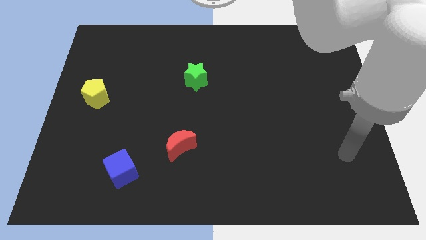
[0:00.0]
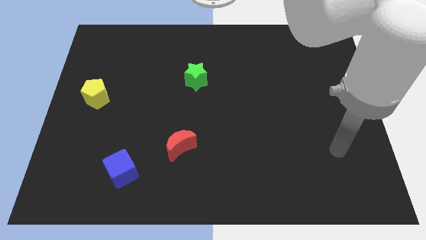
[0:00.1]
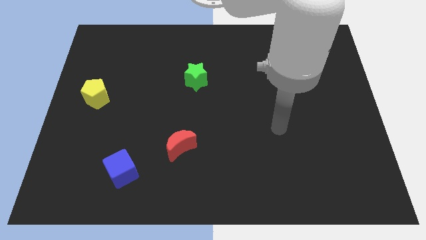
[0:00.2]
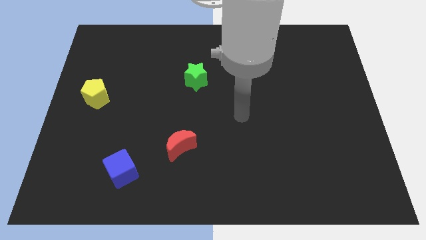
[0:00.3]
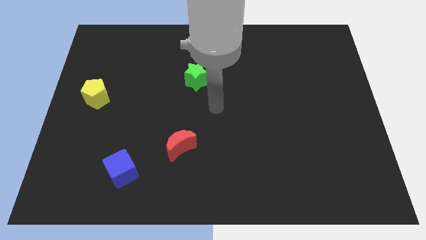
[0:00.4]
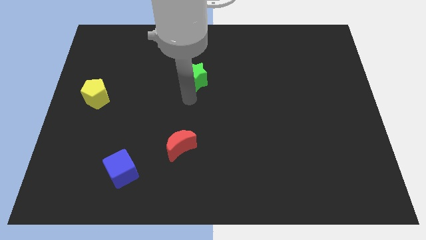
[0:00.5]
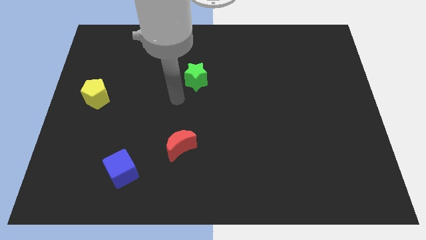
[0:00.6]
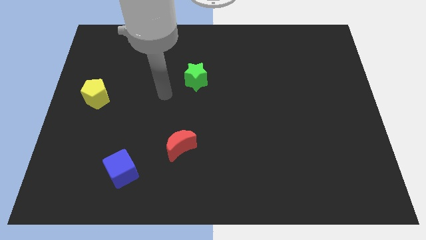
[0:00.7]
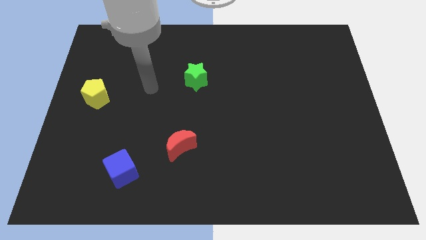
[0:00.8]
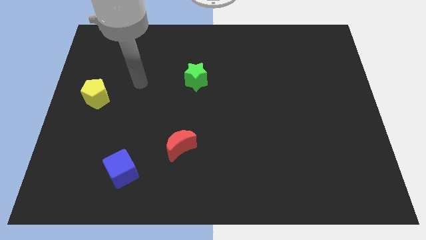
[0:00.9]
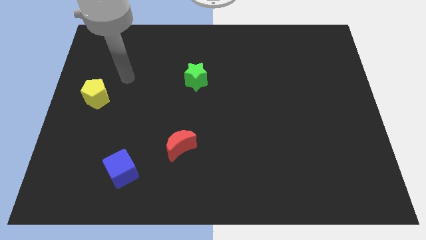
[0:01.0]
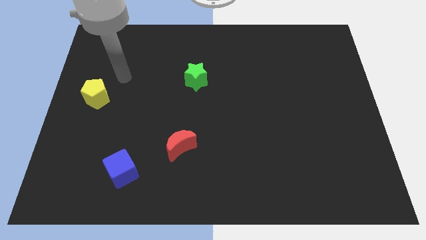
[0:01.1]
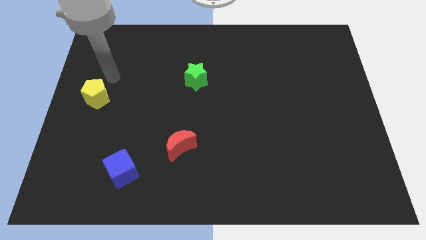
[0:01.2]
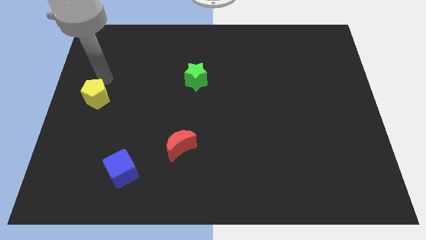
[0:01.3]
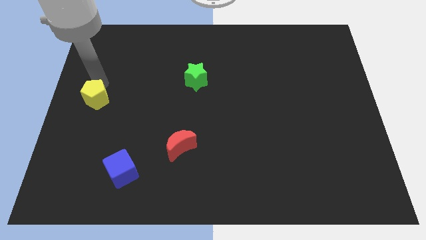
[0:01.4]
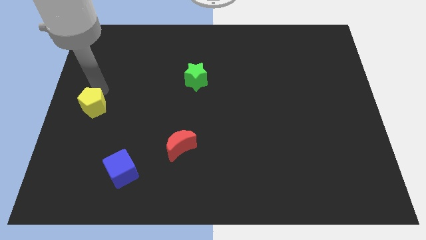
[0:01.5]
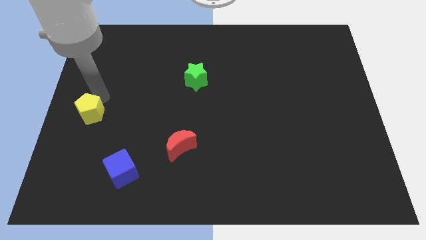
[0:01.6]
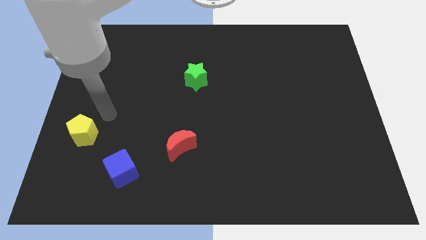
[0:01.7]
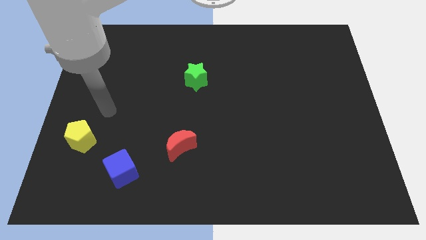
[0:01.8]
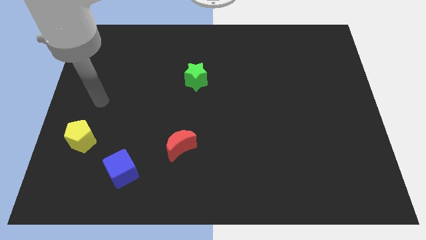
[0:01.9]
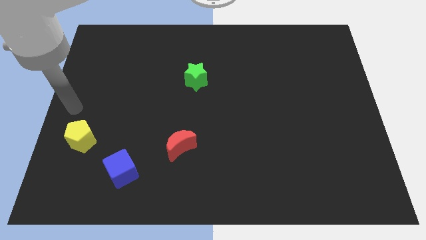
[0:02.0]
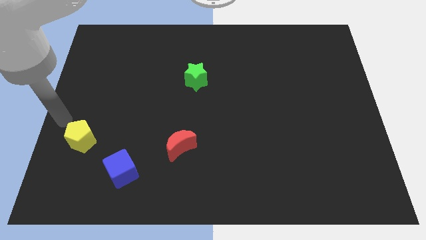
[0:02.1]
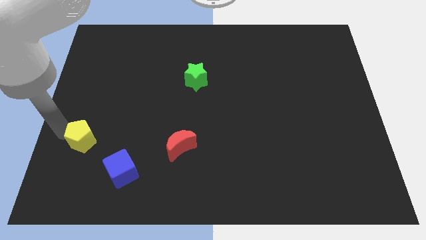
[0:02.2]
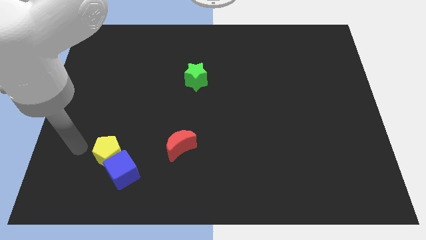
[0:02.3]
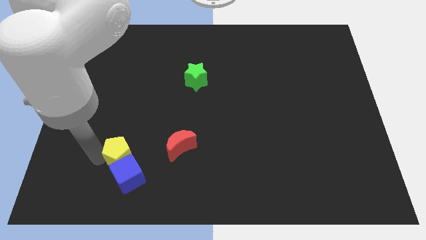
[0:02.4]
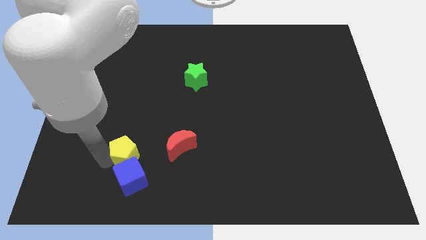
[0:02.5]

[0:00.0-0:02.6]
move the pentagon next to the blue cube

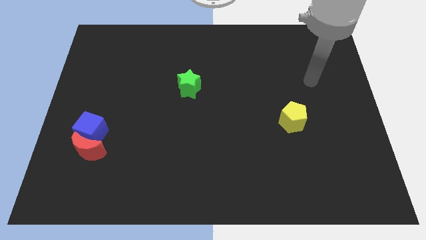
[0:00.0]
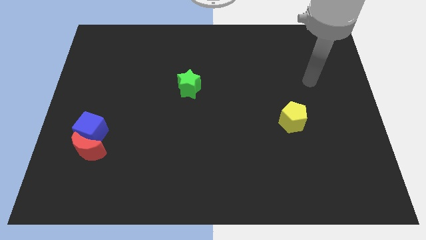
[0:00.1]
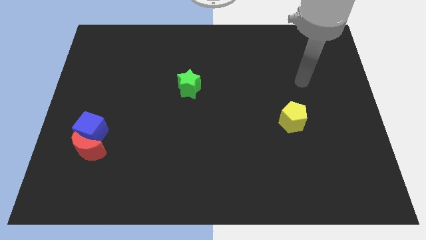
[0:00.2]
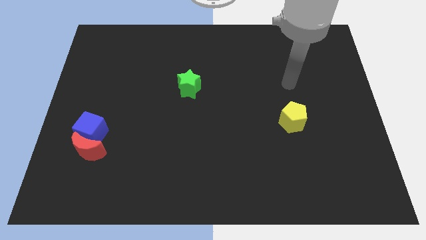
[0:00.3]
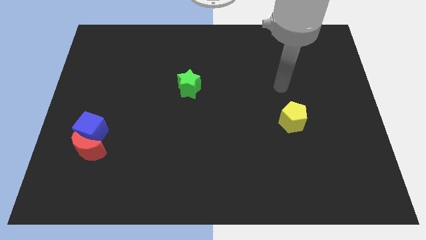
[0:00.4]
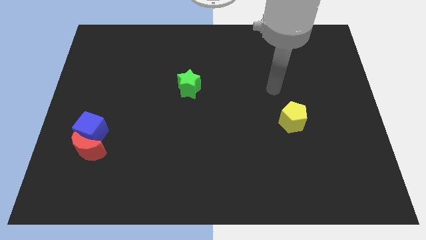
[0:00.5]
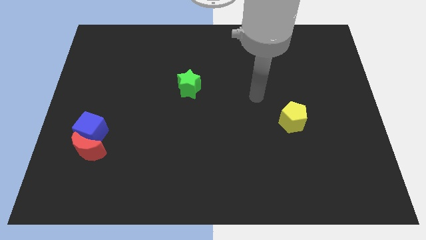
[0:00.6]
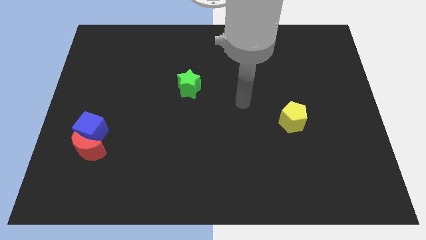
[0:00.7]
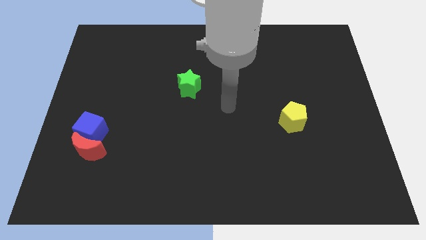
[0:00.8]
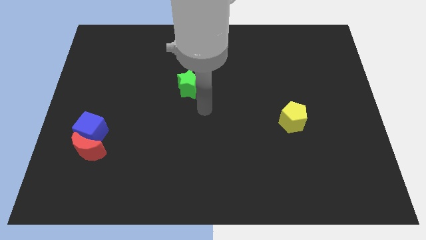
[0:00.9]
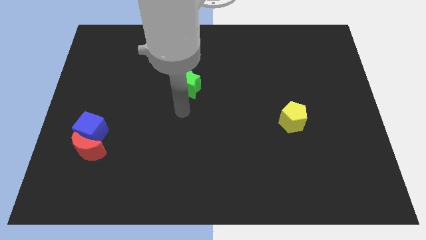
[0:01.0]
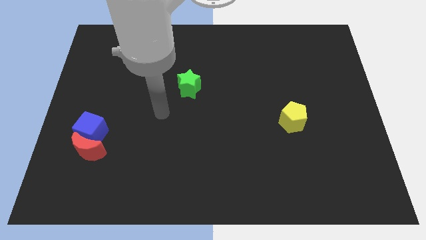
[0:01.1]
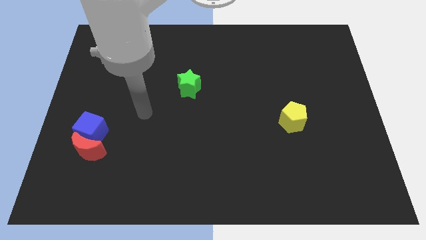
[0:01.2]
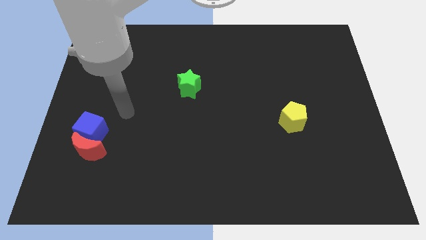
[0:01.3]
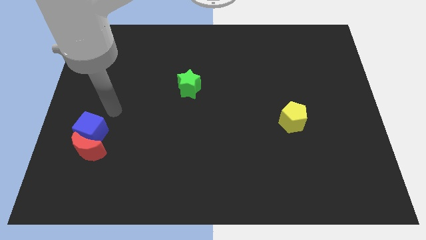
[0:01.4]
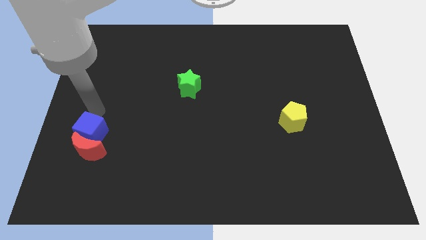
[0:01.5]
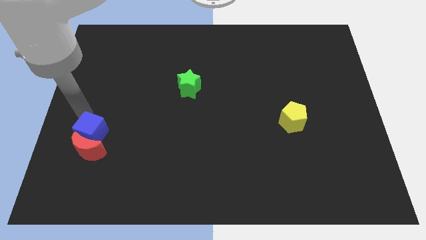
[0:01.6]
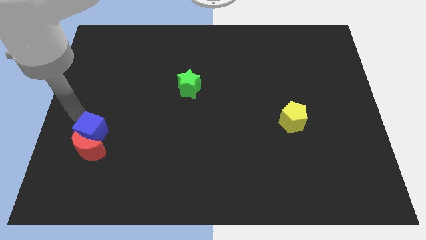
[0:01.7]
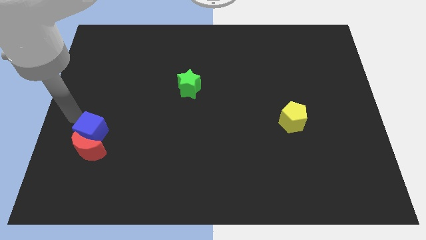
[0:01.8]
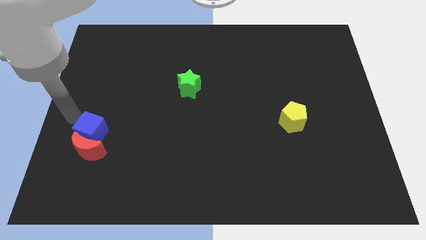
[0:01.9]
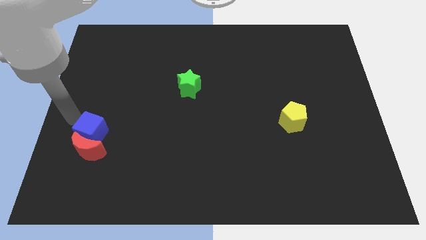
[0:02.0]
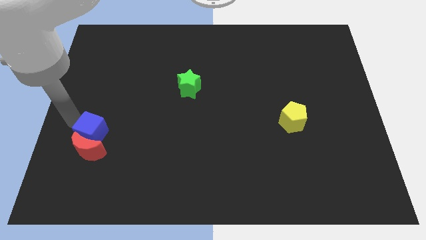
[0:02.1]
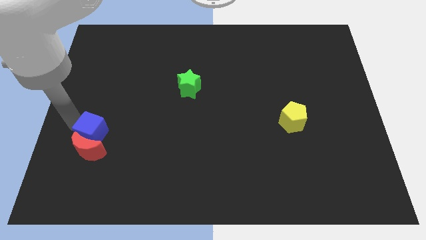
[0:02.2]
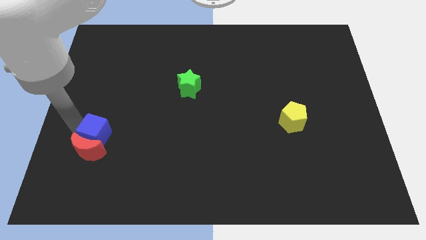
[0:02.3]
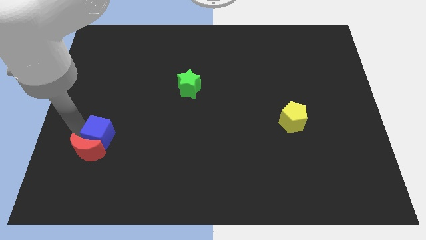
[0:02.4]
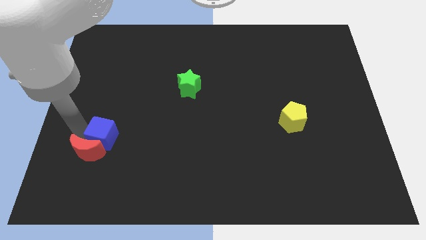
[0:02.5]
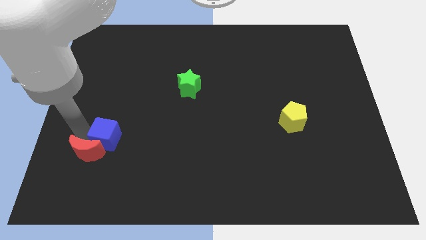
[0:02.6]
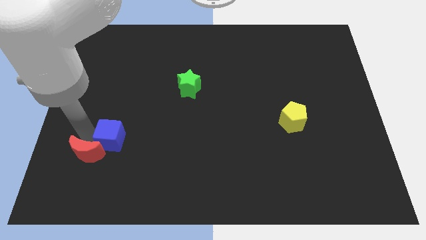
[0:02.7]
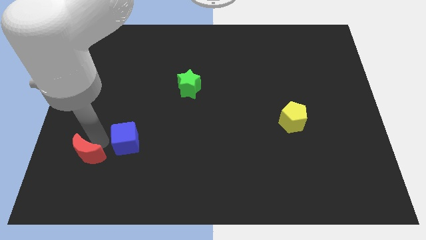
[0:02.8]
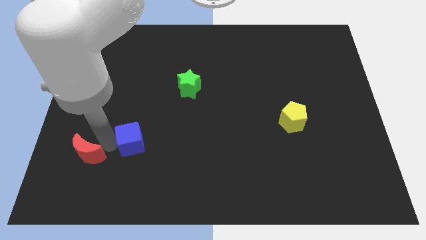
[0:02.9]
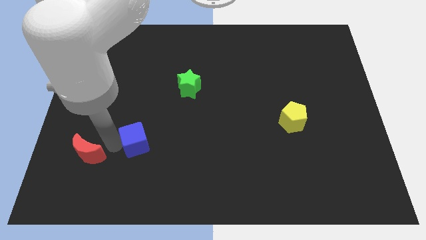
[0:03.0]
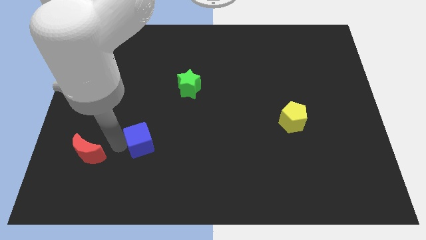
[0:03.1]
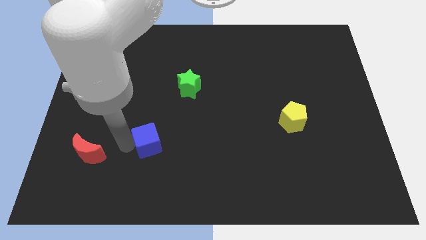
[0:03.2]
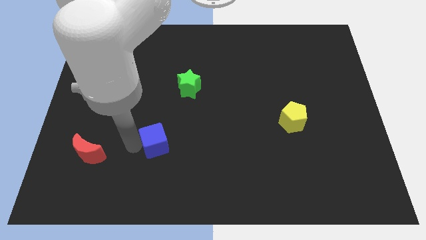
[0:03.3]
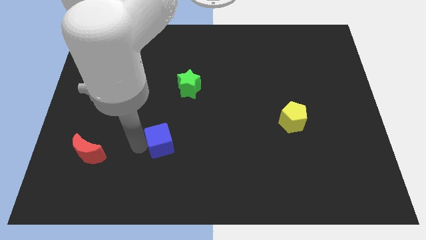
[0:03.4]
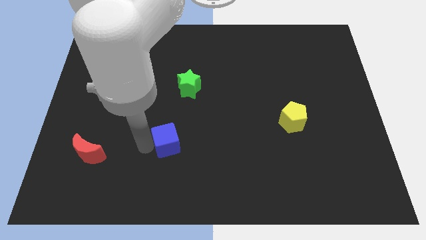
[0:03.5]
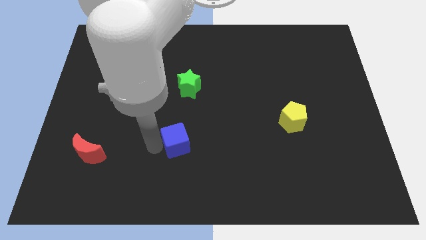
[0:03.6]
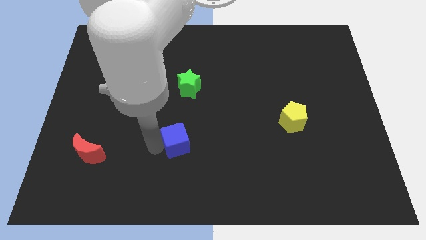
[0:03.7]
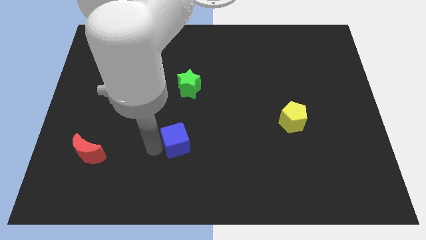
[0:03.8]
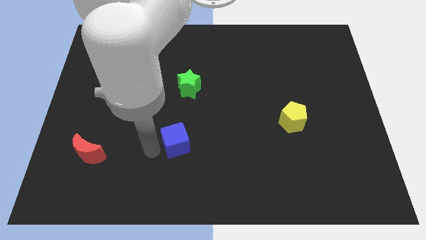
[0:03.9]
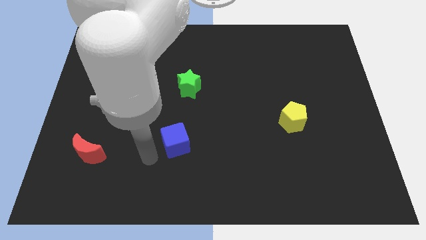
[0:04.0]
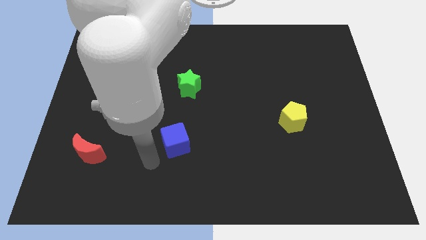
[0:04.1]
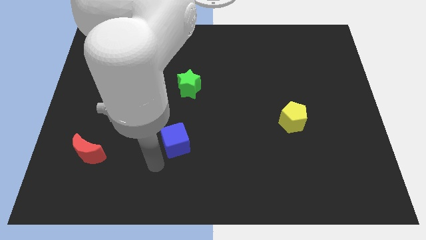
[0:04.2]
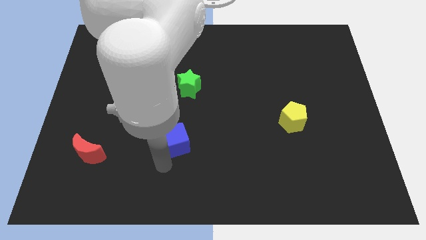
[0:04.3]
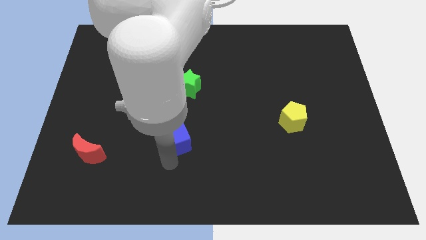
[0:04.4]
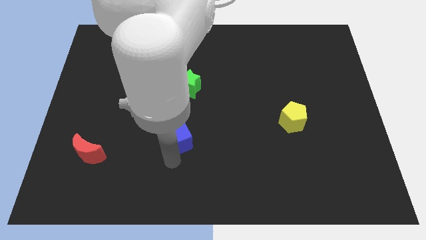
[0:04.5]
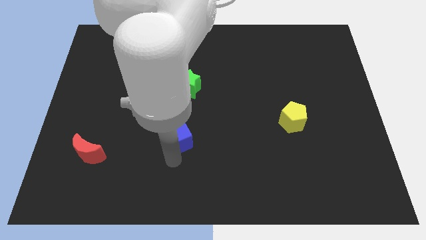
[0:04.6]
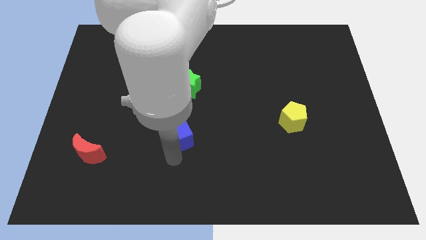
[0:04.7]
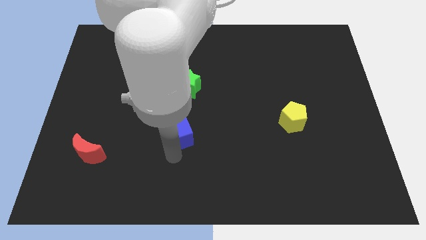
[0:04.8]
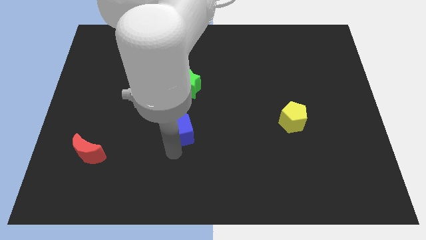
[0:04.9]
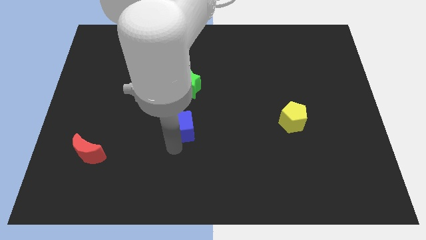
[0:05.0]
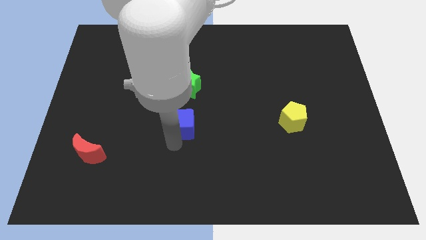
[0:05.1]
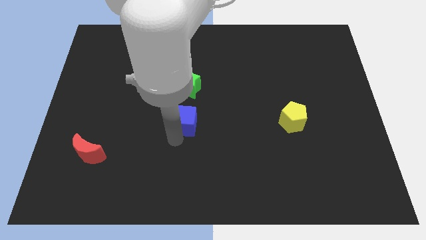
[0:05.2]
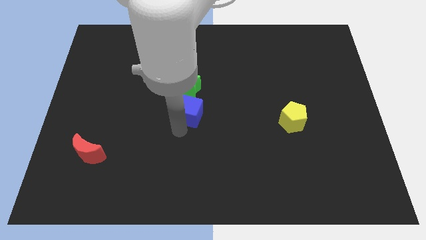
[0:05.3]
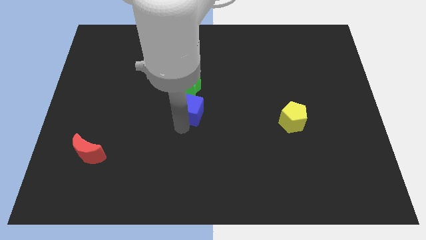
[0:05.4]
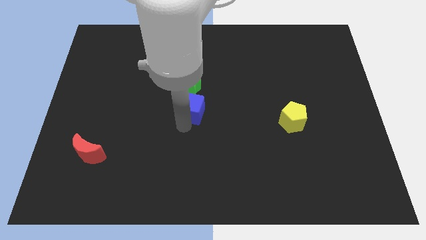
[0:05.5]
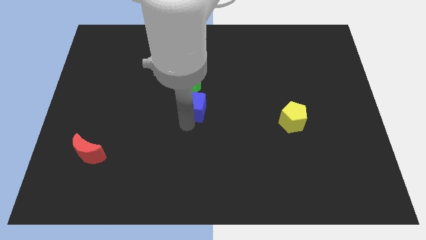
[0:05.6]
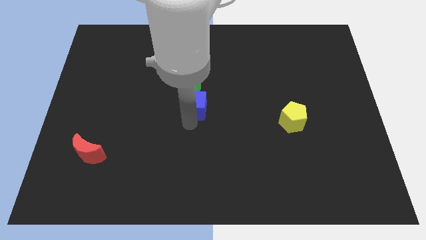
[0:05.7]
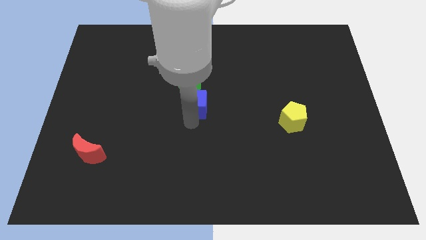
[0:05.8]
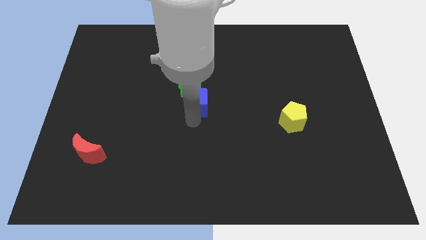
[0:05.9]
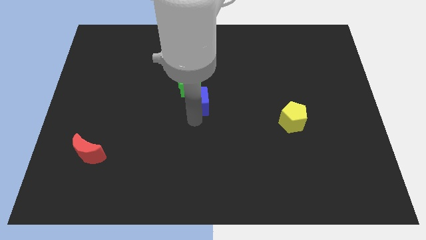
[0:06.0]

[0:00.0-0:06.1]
push the blue cube to the green block
